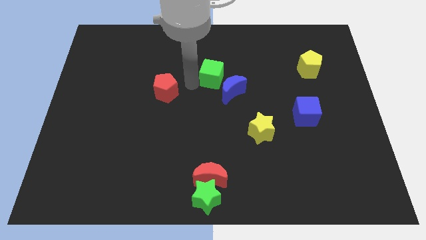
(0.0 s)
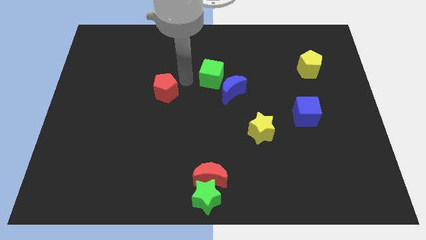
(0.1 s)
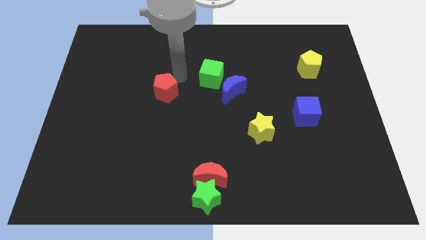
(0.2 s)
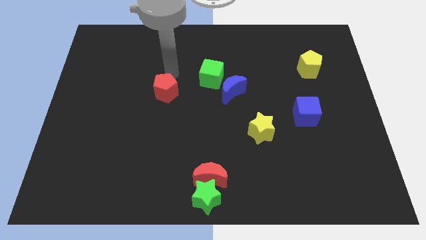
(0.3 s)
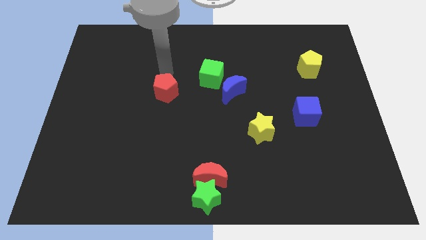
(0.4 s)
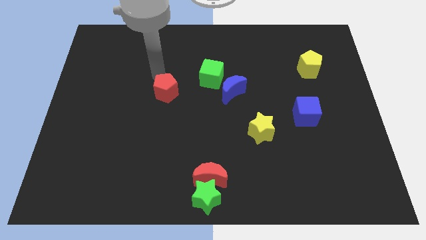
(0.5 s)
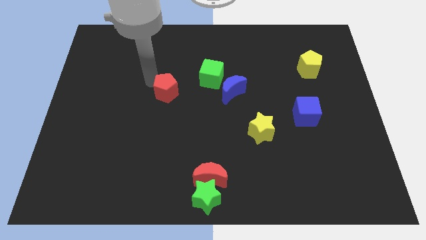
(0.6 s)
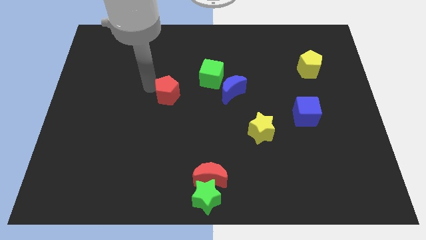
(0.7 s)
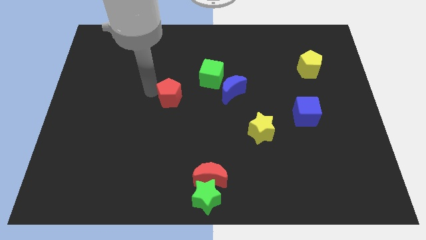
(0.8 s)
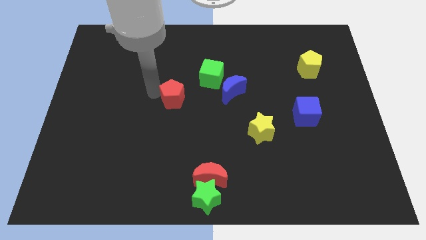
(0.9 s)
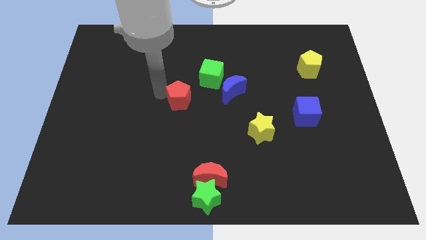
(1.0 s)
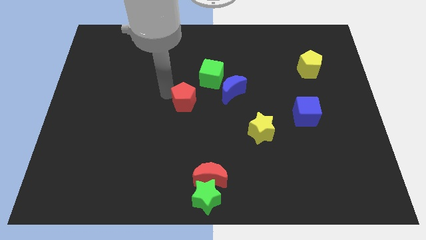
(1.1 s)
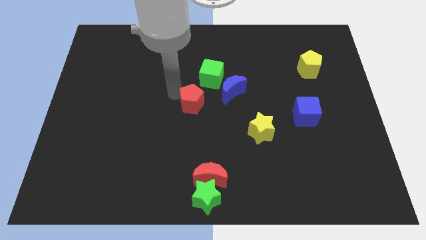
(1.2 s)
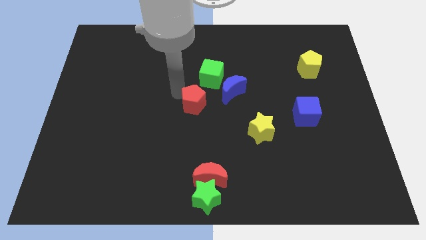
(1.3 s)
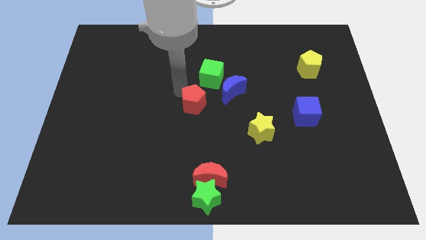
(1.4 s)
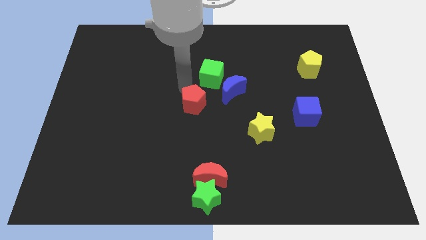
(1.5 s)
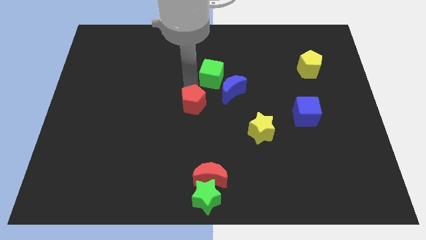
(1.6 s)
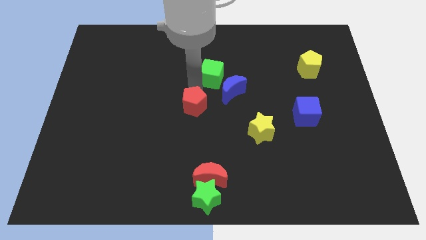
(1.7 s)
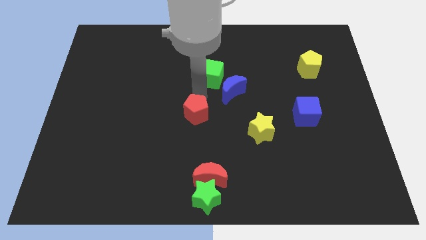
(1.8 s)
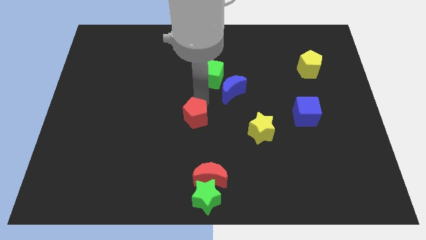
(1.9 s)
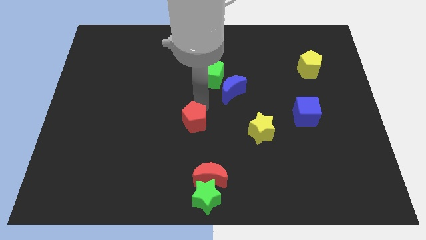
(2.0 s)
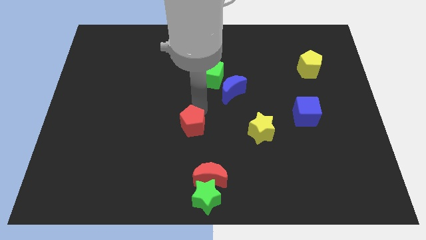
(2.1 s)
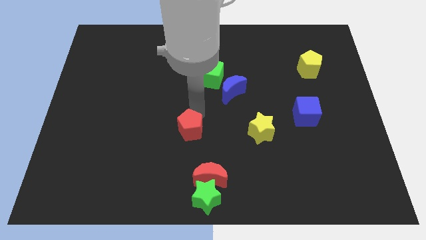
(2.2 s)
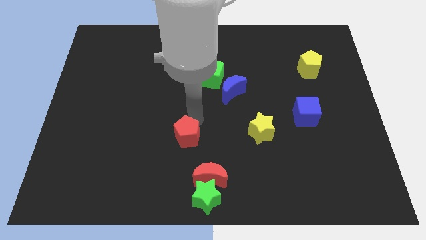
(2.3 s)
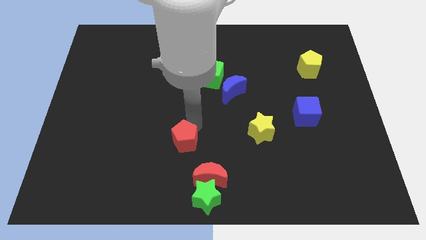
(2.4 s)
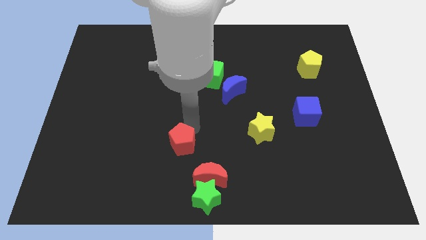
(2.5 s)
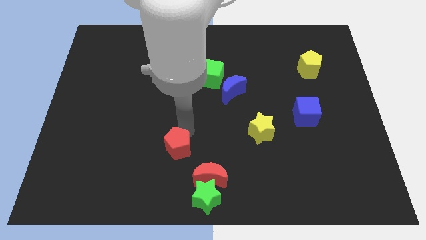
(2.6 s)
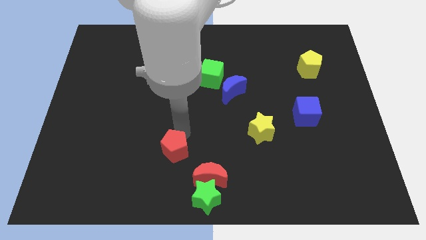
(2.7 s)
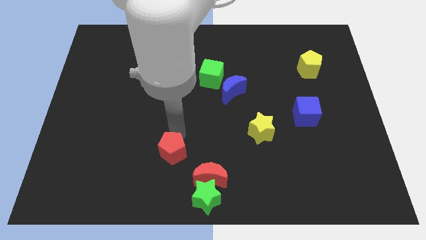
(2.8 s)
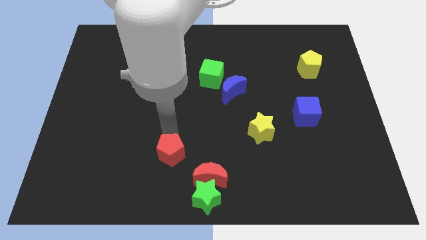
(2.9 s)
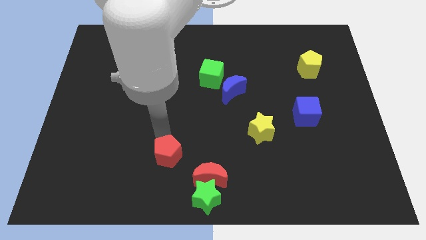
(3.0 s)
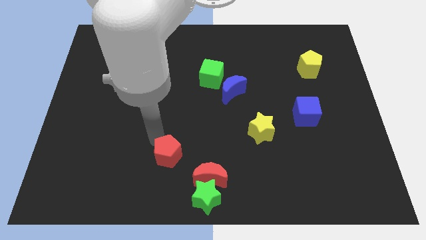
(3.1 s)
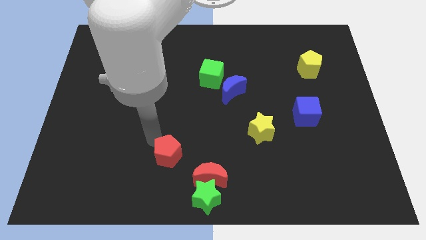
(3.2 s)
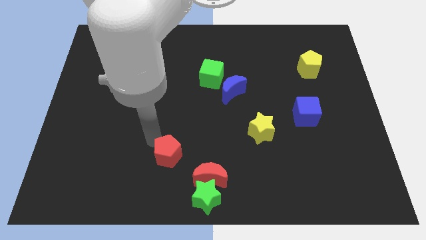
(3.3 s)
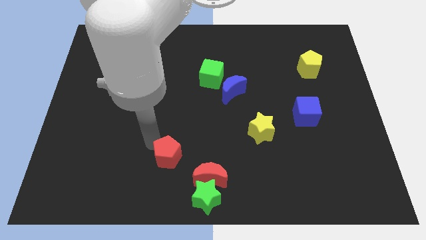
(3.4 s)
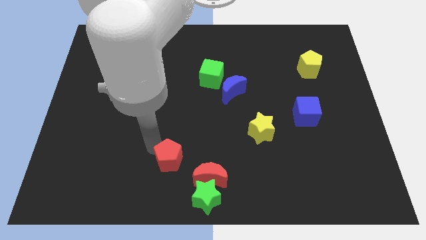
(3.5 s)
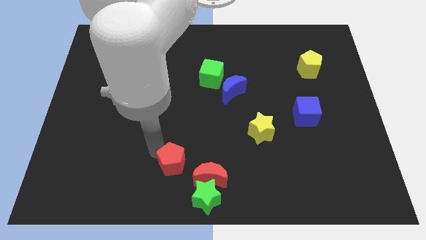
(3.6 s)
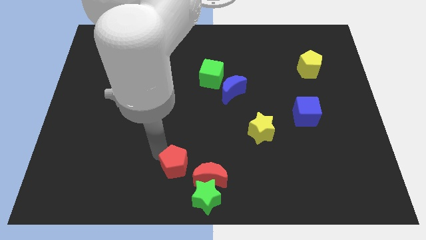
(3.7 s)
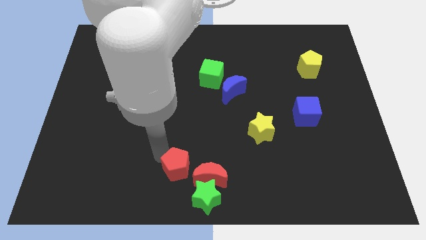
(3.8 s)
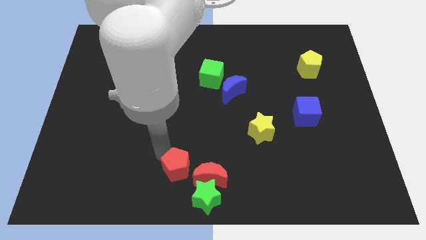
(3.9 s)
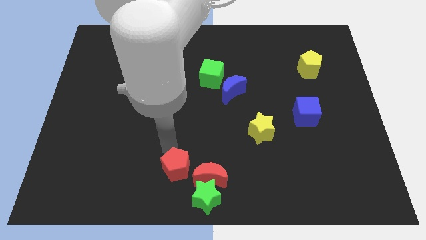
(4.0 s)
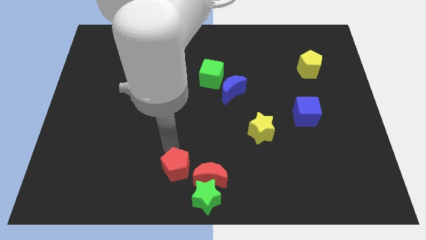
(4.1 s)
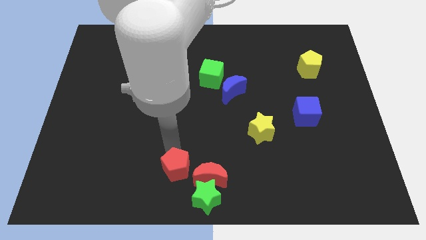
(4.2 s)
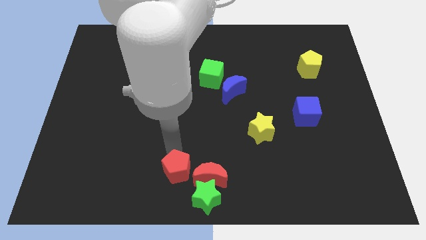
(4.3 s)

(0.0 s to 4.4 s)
move the red pentagon left to the red crescent

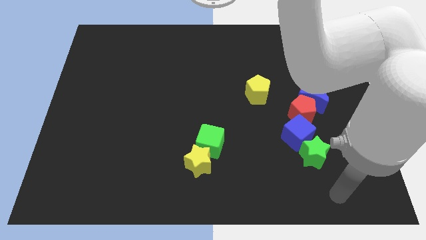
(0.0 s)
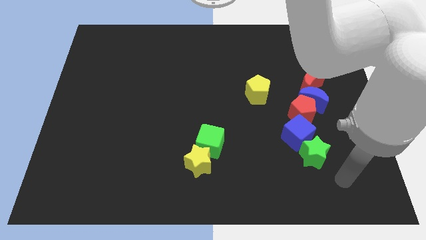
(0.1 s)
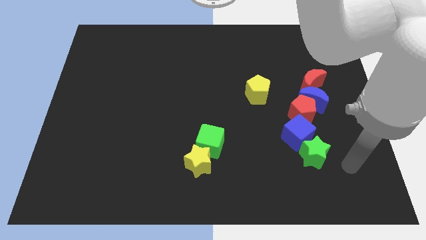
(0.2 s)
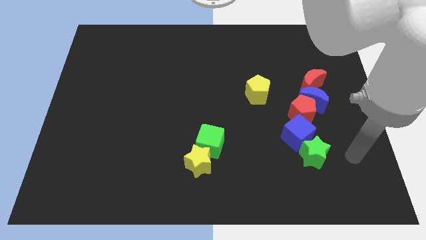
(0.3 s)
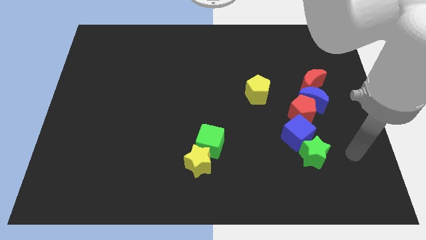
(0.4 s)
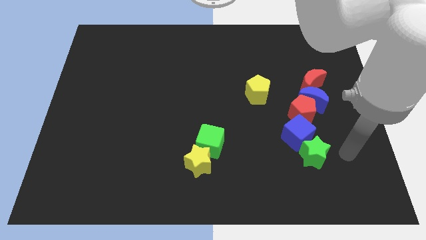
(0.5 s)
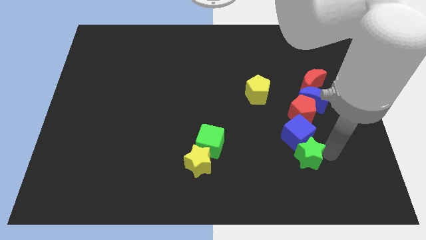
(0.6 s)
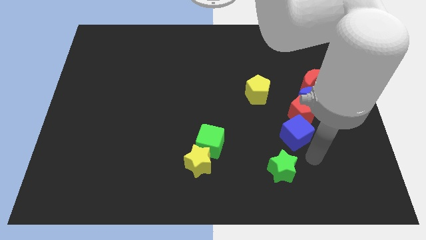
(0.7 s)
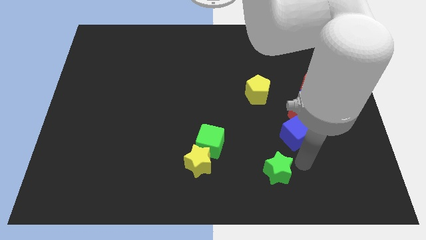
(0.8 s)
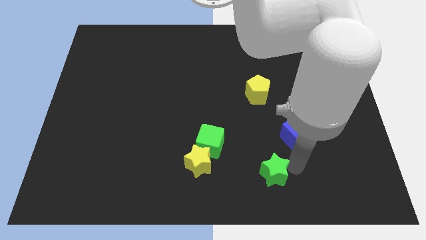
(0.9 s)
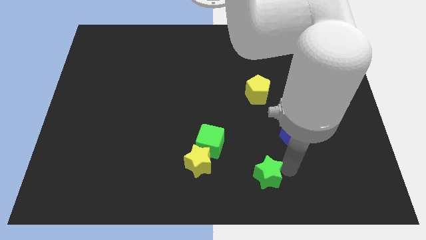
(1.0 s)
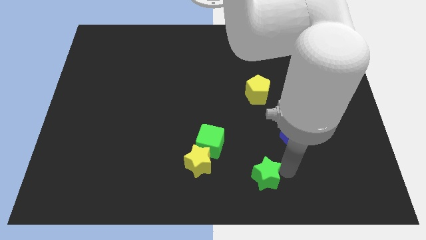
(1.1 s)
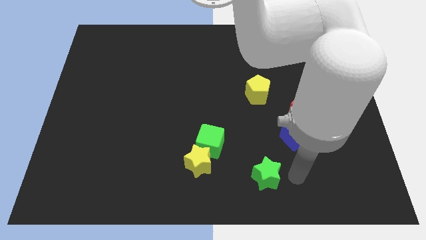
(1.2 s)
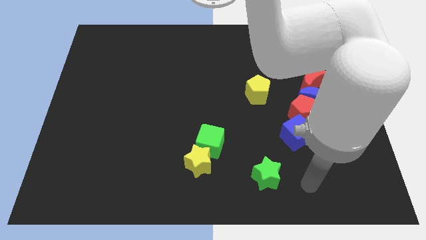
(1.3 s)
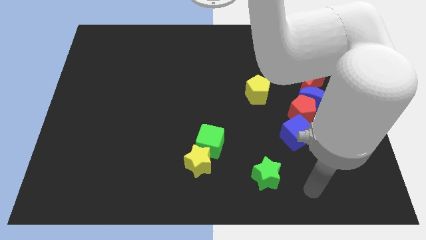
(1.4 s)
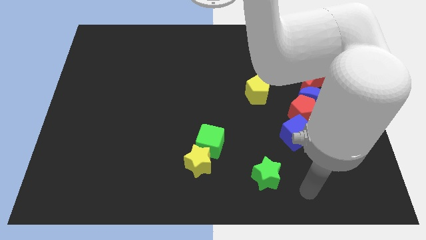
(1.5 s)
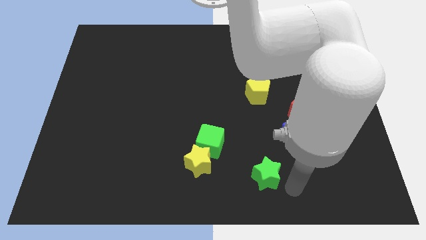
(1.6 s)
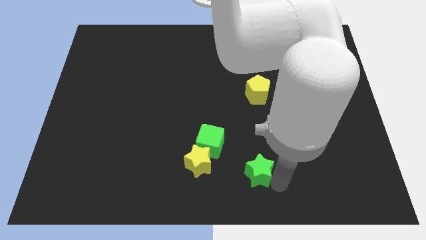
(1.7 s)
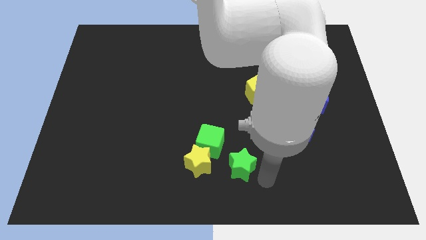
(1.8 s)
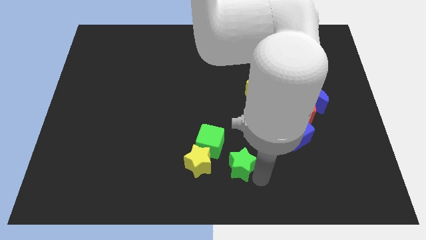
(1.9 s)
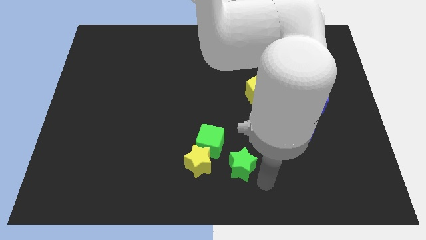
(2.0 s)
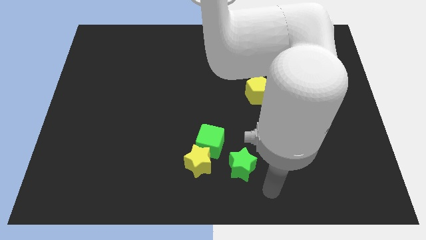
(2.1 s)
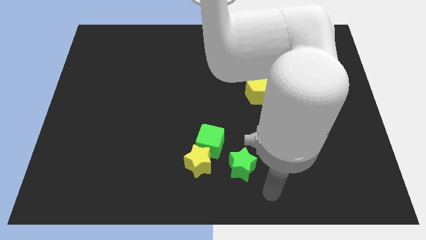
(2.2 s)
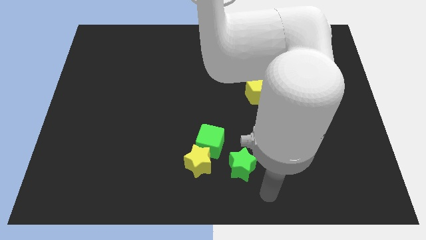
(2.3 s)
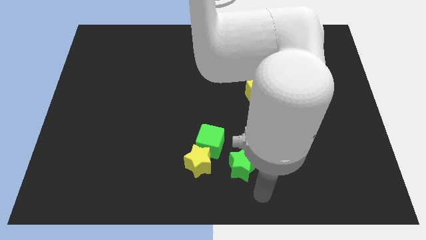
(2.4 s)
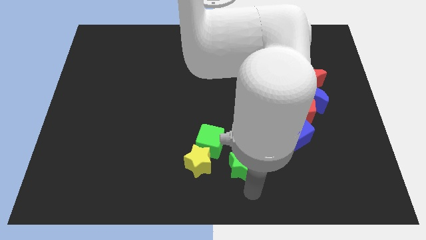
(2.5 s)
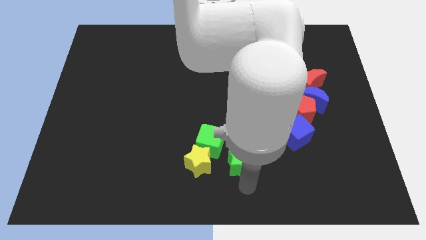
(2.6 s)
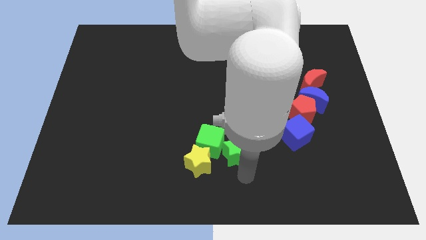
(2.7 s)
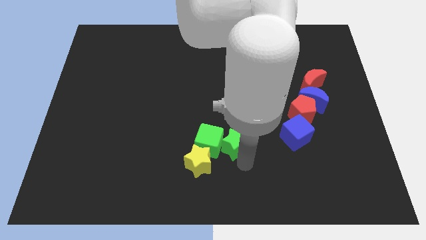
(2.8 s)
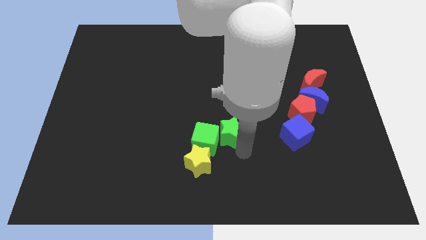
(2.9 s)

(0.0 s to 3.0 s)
push the green star into green cube

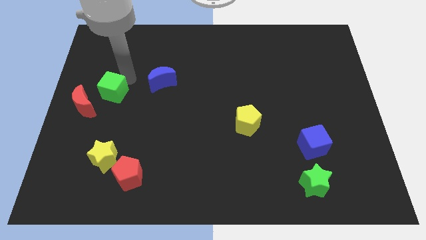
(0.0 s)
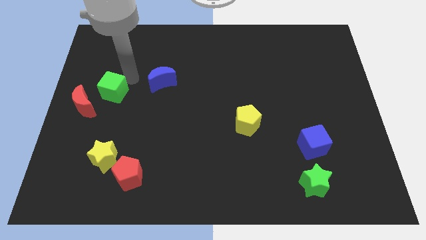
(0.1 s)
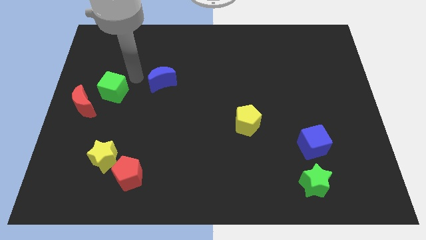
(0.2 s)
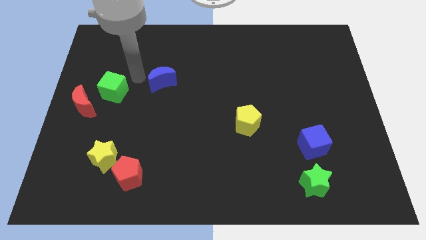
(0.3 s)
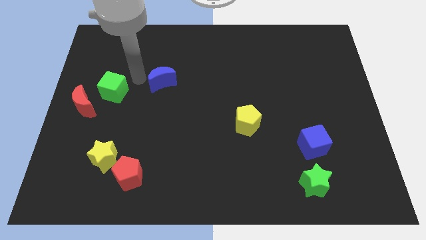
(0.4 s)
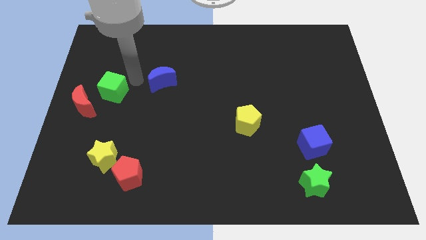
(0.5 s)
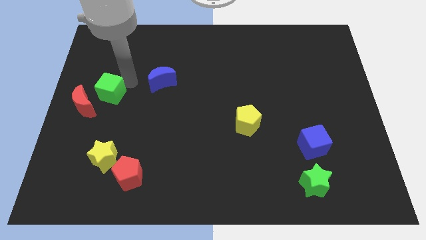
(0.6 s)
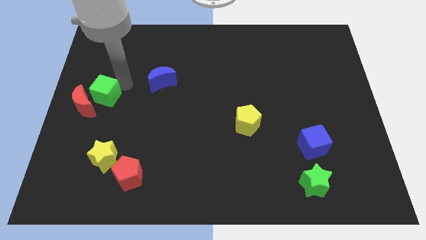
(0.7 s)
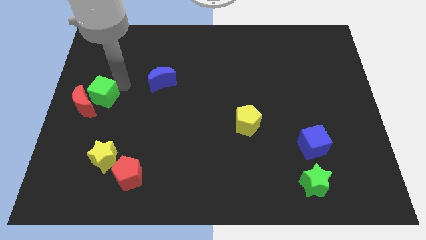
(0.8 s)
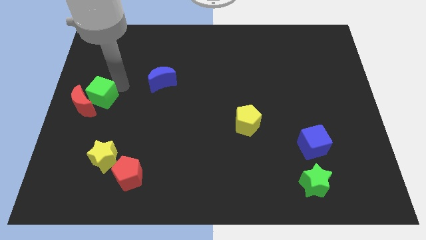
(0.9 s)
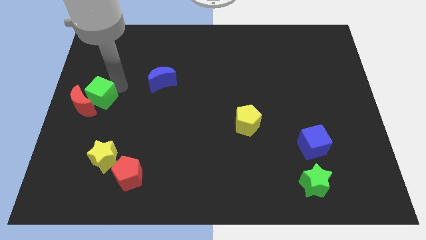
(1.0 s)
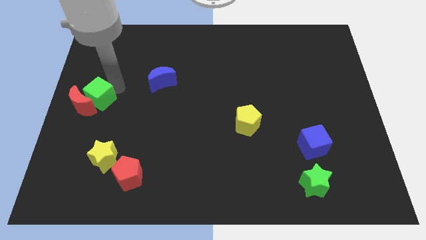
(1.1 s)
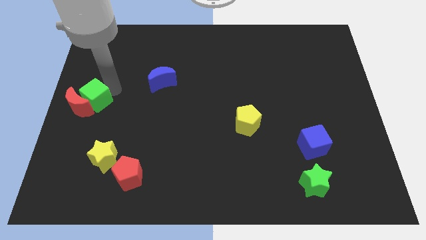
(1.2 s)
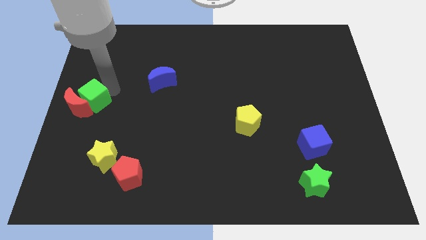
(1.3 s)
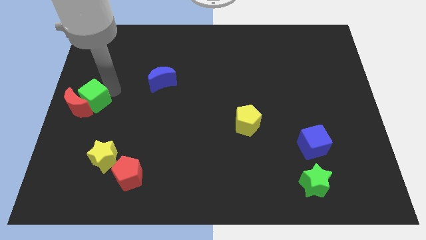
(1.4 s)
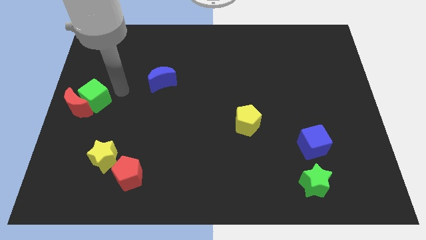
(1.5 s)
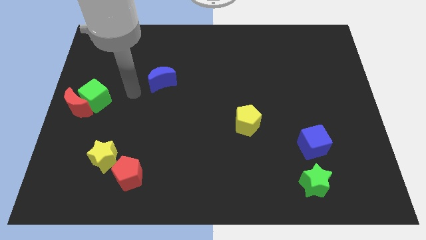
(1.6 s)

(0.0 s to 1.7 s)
push the green block into the red moon
